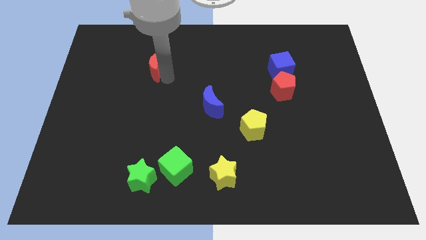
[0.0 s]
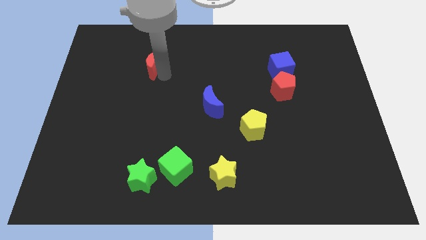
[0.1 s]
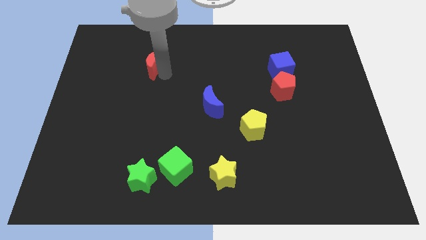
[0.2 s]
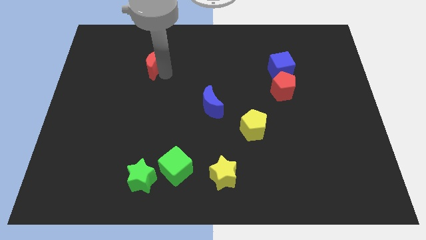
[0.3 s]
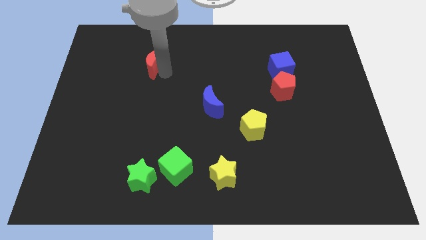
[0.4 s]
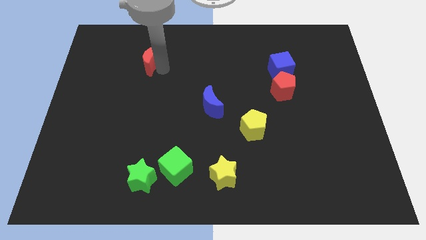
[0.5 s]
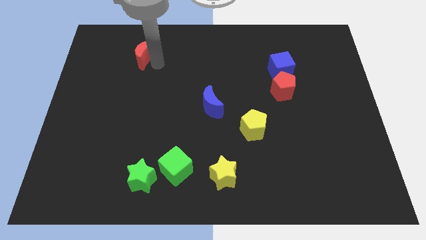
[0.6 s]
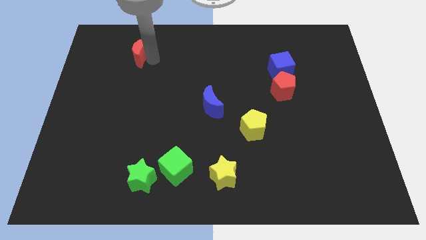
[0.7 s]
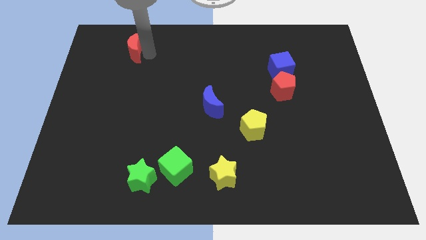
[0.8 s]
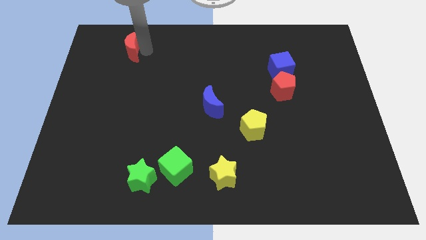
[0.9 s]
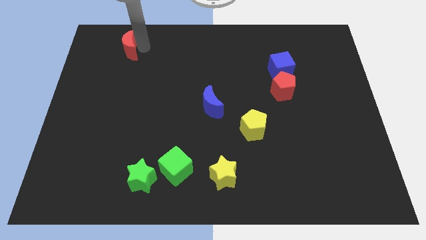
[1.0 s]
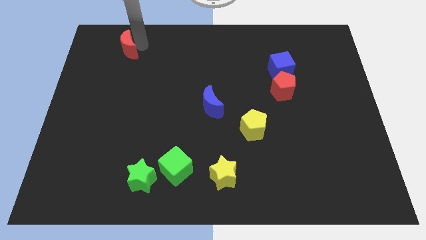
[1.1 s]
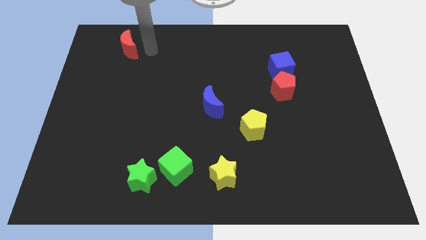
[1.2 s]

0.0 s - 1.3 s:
push the red crescent to the top left side of the board

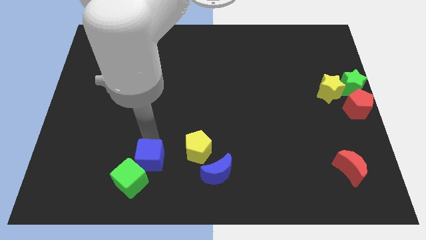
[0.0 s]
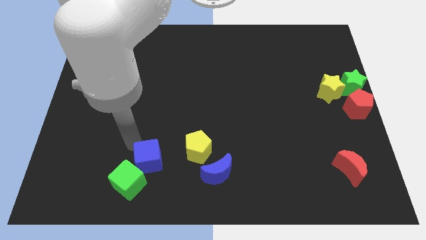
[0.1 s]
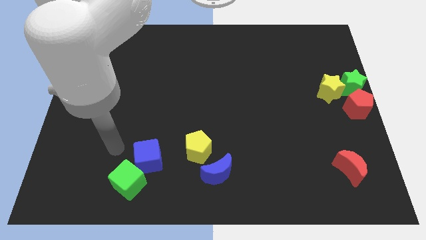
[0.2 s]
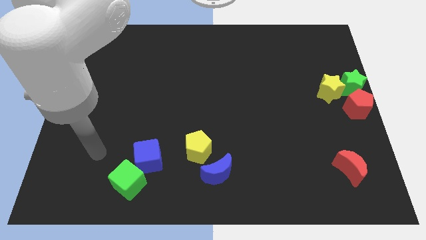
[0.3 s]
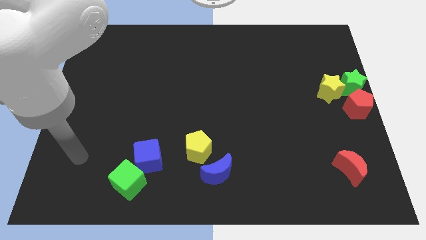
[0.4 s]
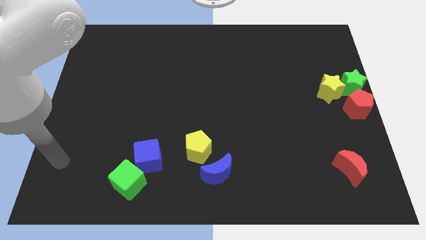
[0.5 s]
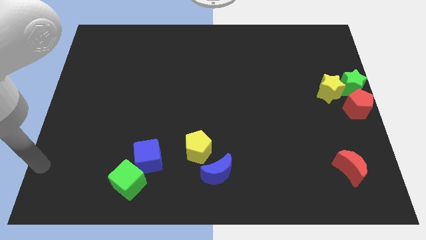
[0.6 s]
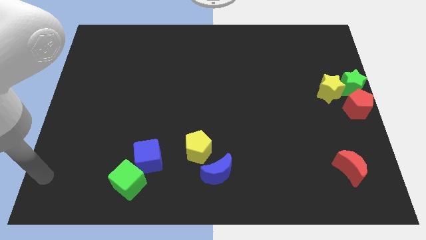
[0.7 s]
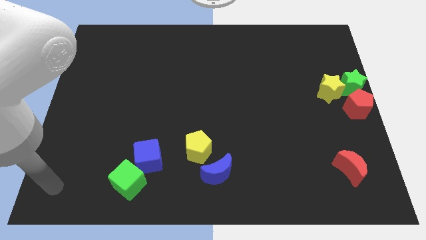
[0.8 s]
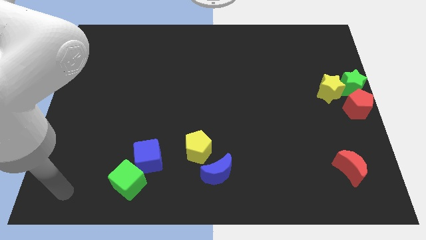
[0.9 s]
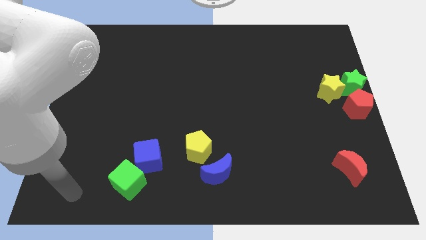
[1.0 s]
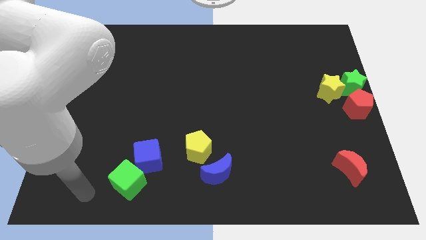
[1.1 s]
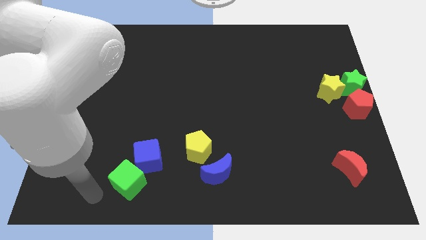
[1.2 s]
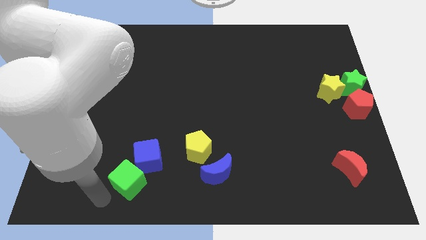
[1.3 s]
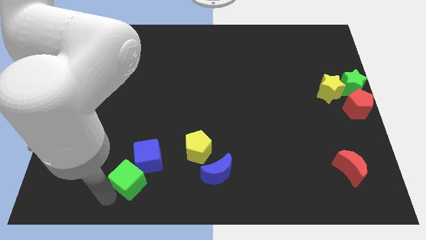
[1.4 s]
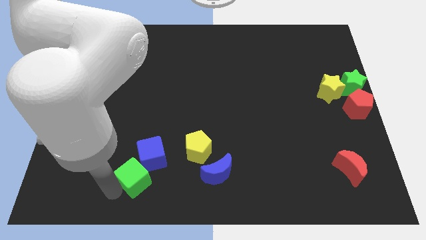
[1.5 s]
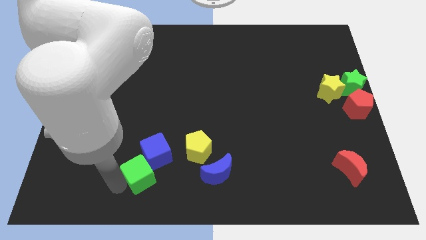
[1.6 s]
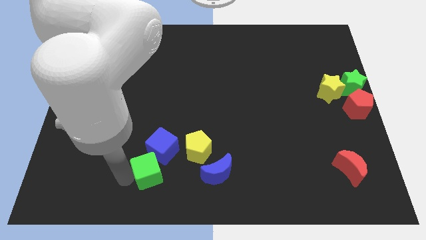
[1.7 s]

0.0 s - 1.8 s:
move both cubes slightly up

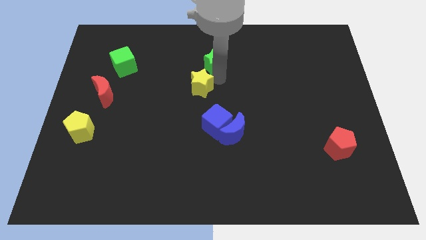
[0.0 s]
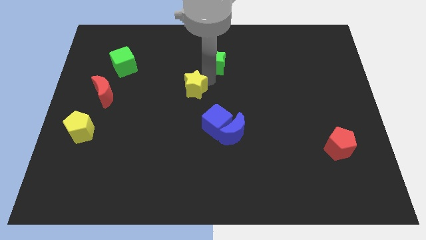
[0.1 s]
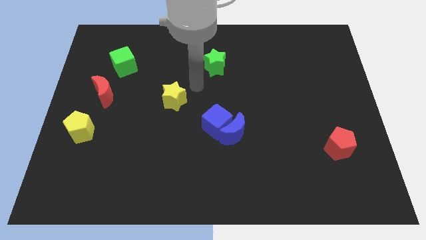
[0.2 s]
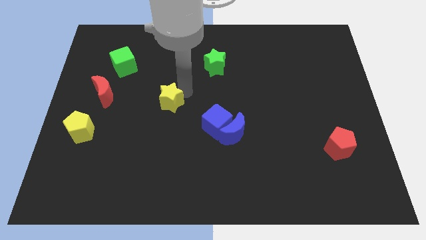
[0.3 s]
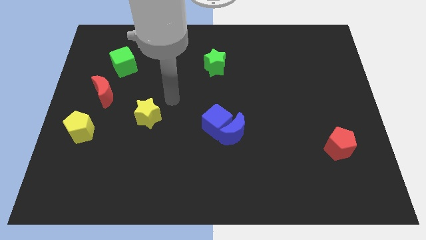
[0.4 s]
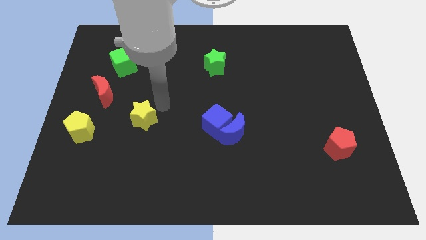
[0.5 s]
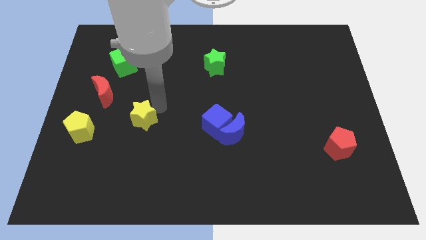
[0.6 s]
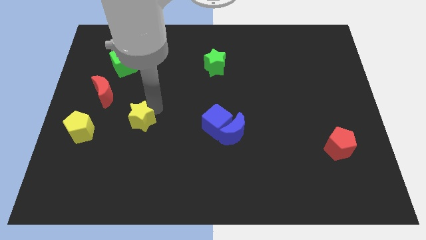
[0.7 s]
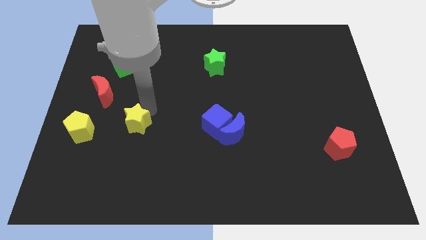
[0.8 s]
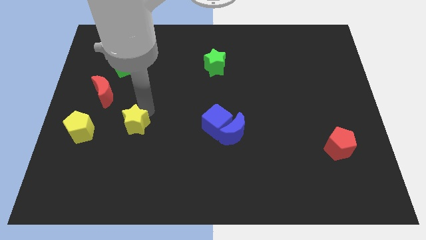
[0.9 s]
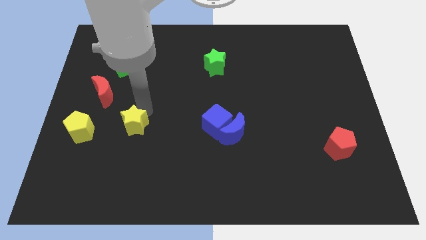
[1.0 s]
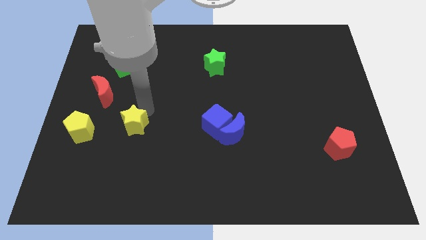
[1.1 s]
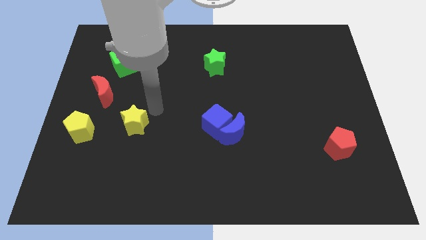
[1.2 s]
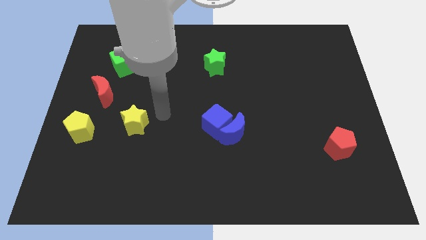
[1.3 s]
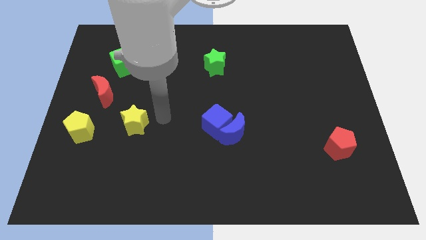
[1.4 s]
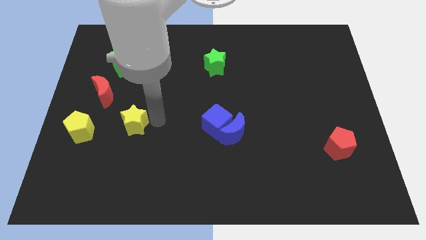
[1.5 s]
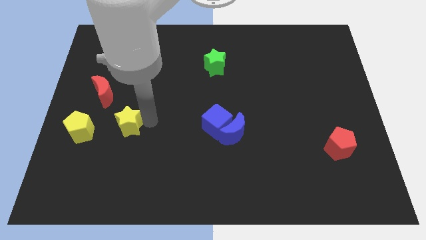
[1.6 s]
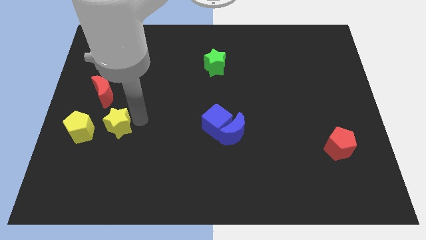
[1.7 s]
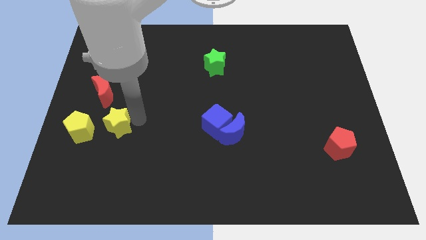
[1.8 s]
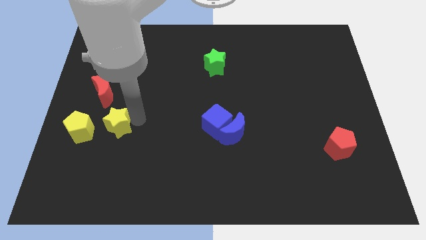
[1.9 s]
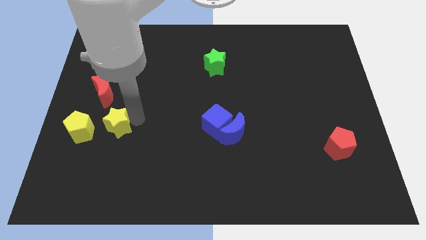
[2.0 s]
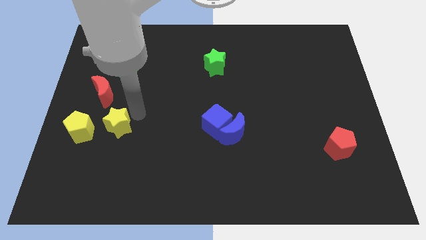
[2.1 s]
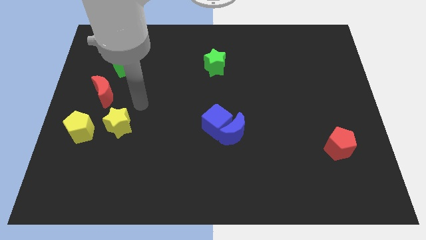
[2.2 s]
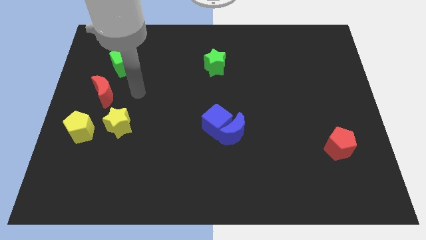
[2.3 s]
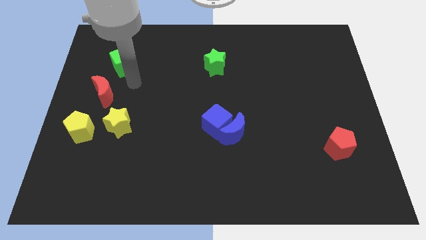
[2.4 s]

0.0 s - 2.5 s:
move the yellow star to the right of the yellow pentagon

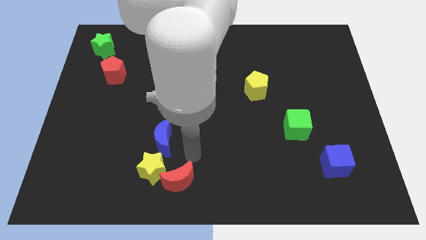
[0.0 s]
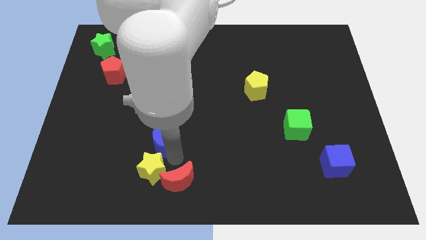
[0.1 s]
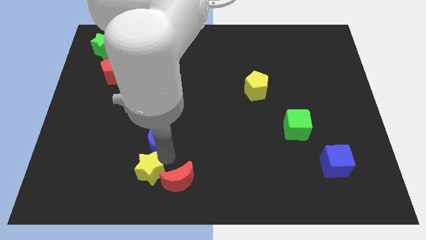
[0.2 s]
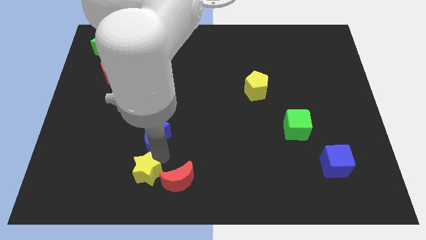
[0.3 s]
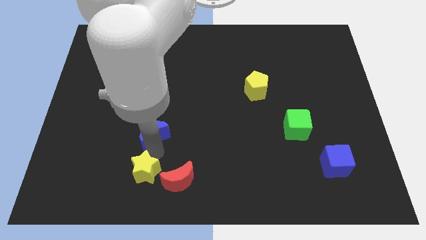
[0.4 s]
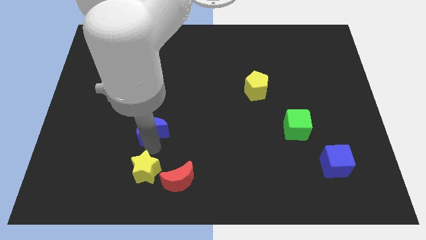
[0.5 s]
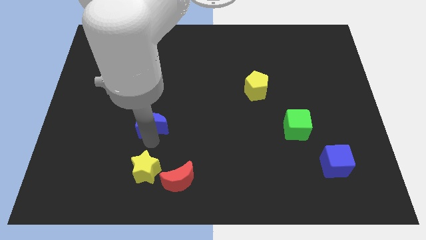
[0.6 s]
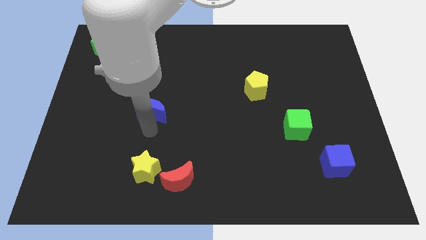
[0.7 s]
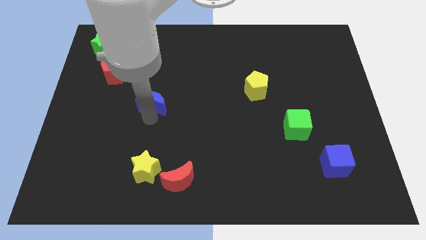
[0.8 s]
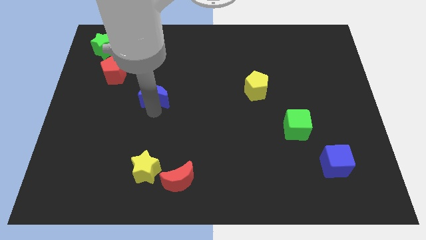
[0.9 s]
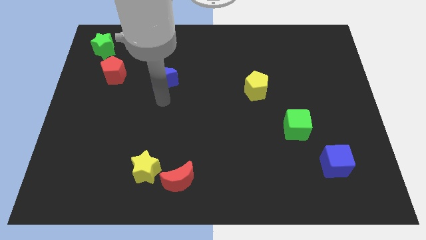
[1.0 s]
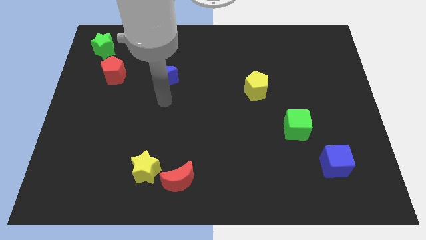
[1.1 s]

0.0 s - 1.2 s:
place blue moon to the right of red pentagon

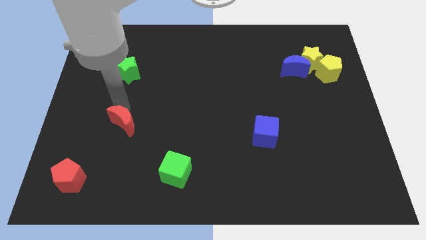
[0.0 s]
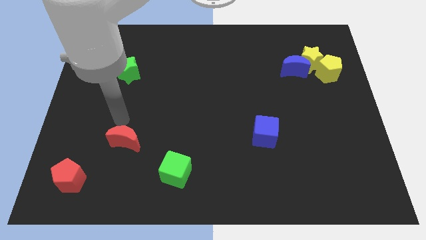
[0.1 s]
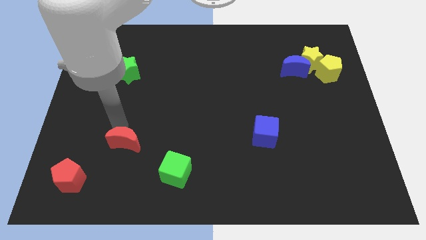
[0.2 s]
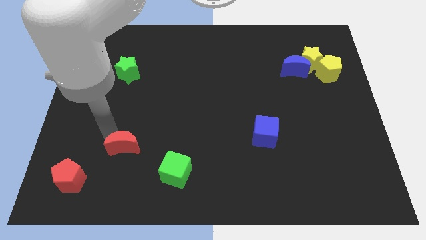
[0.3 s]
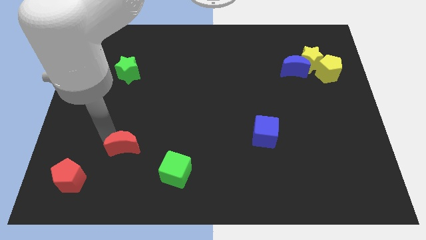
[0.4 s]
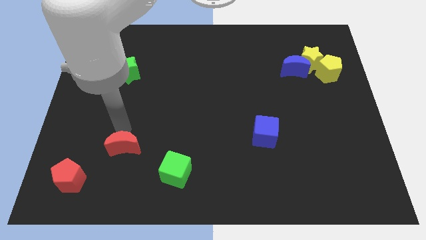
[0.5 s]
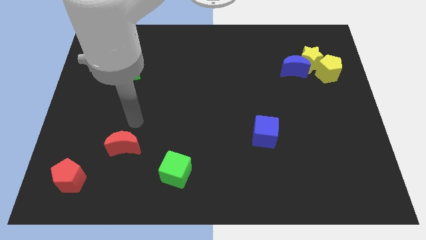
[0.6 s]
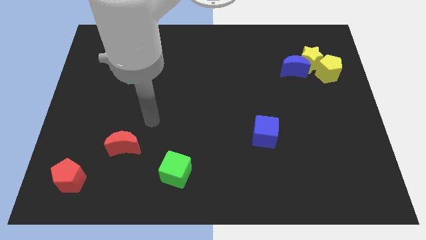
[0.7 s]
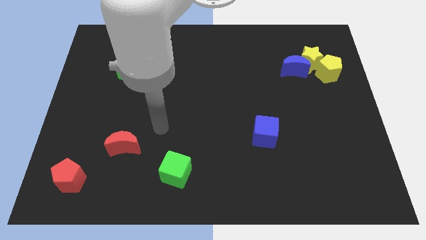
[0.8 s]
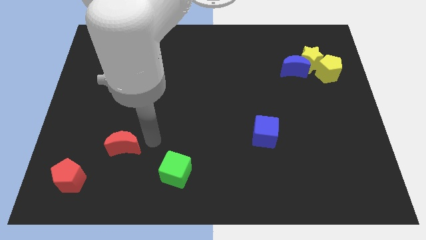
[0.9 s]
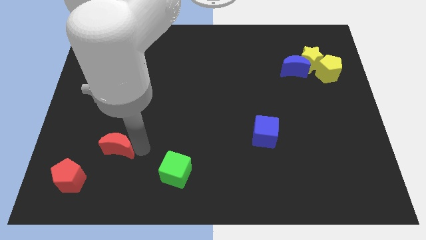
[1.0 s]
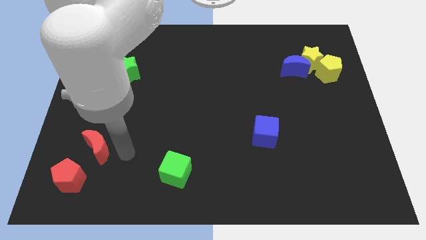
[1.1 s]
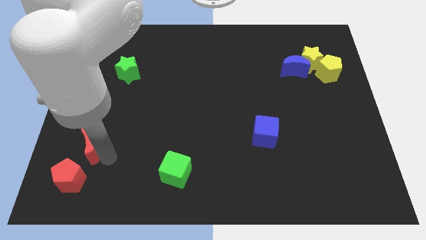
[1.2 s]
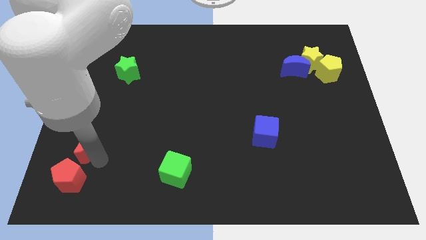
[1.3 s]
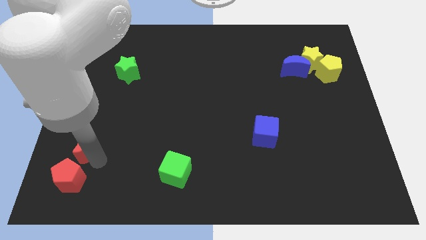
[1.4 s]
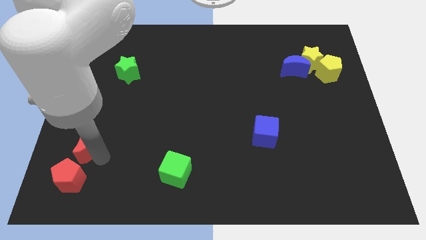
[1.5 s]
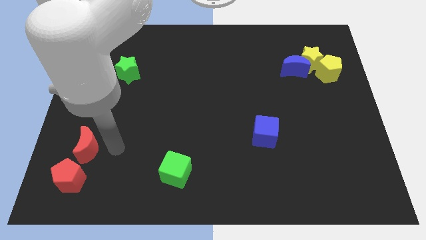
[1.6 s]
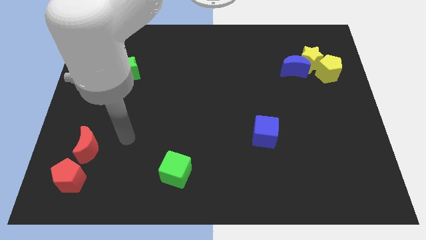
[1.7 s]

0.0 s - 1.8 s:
place the red moon above the red pentagon

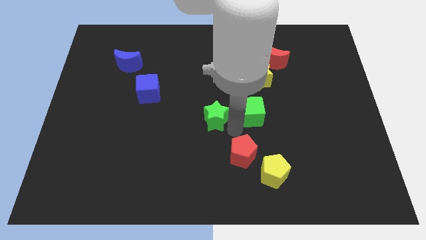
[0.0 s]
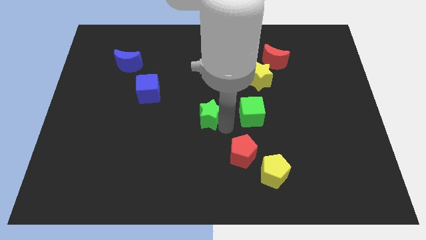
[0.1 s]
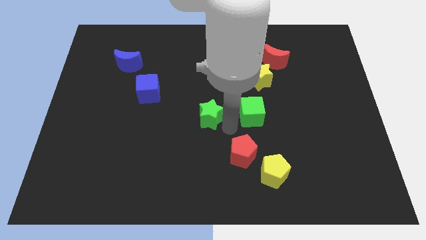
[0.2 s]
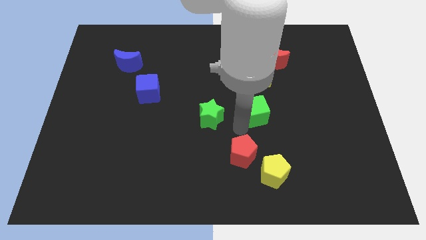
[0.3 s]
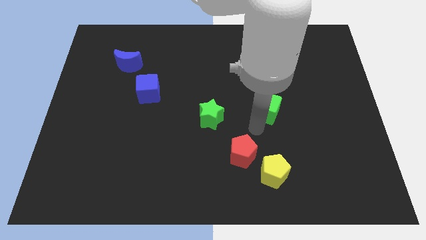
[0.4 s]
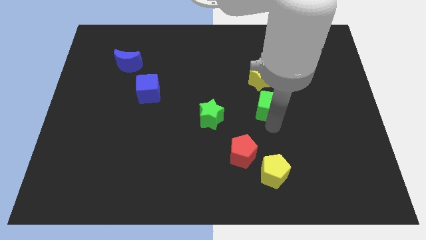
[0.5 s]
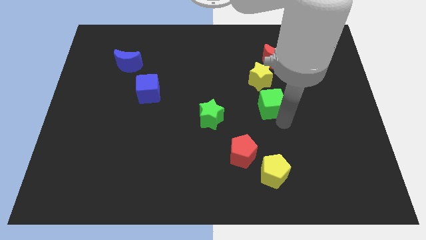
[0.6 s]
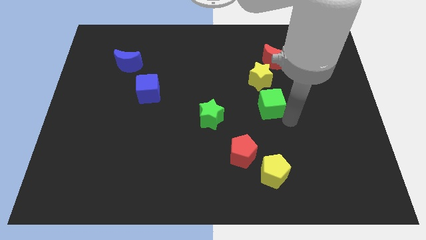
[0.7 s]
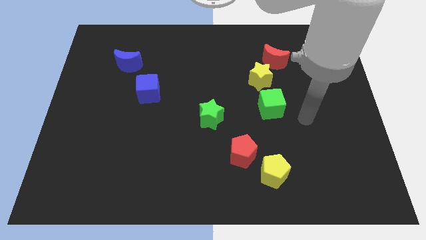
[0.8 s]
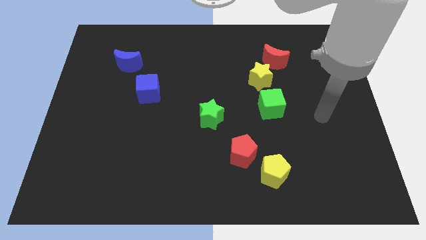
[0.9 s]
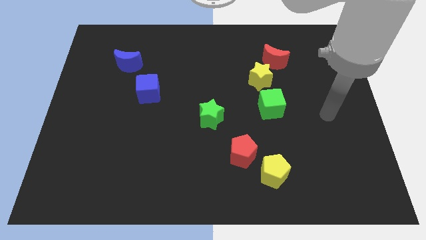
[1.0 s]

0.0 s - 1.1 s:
move the green cube to the to the bottom of the yellow star
